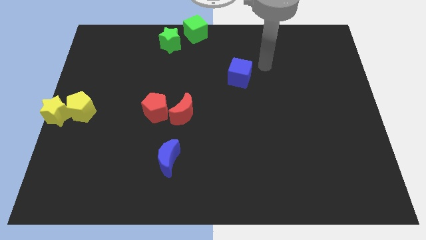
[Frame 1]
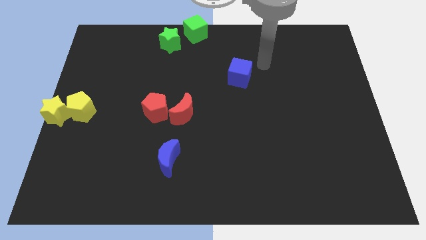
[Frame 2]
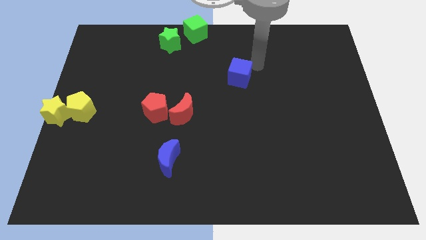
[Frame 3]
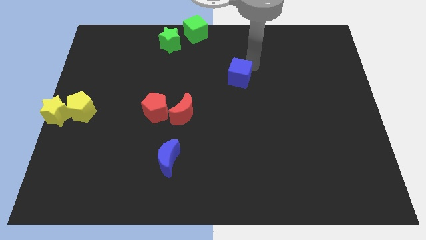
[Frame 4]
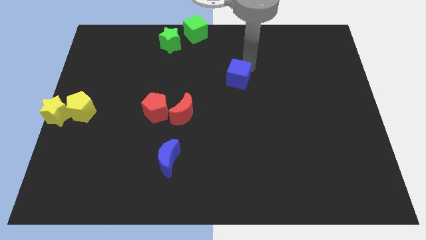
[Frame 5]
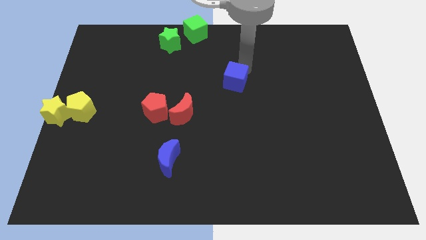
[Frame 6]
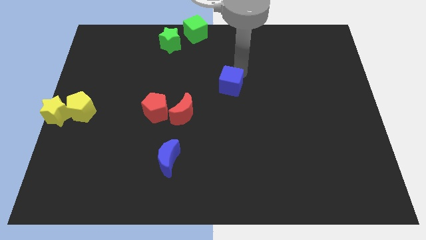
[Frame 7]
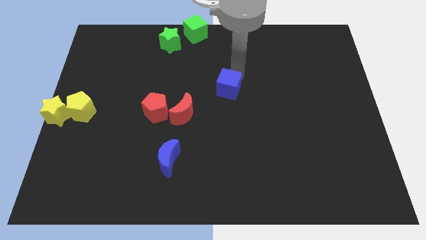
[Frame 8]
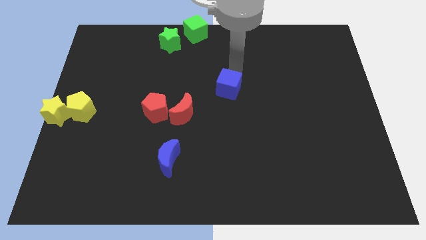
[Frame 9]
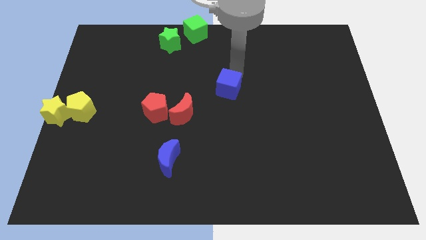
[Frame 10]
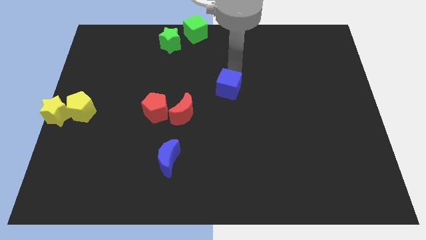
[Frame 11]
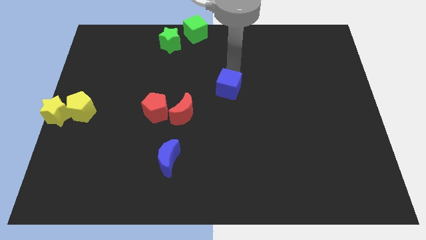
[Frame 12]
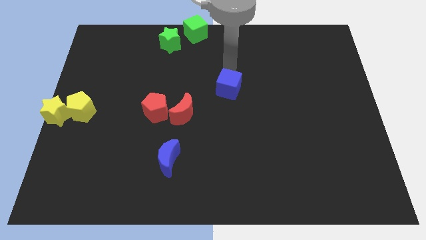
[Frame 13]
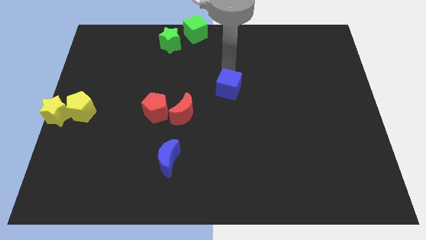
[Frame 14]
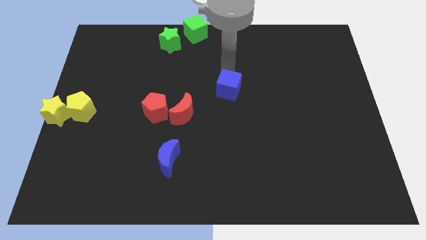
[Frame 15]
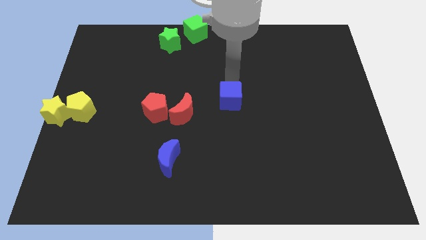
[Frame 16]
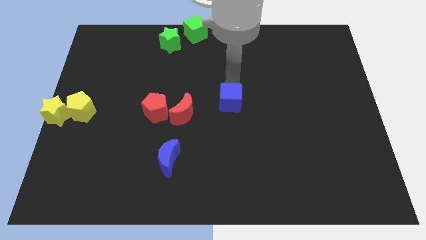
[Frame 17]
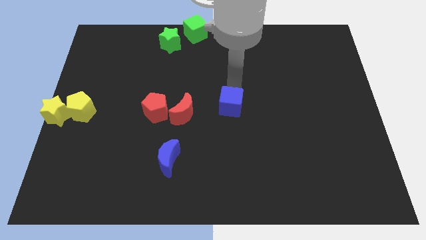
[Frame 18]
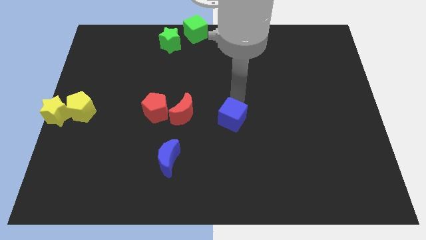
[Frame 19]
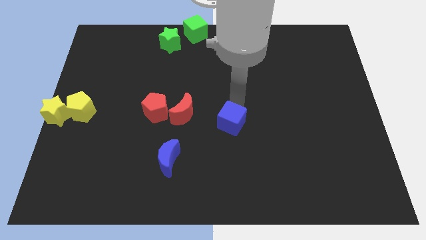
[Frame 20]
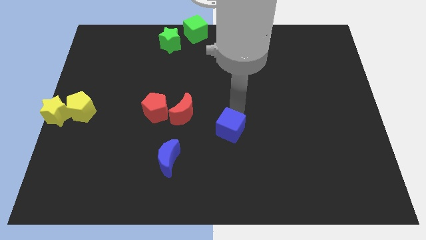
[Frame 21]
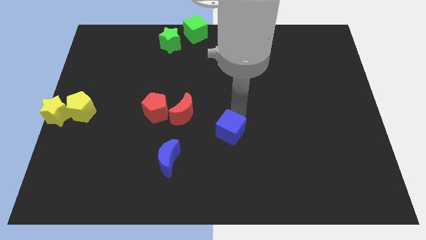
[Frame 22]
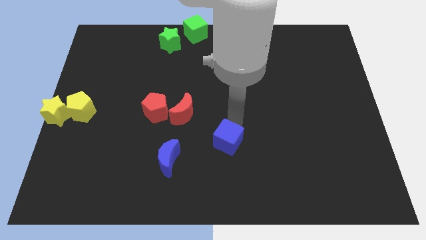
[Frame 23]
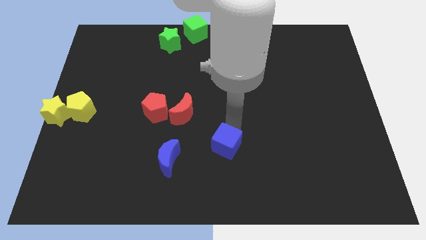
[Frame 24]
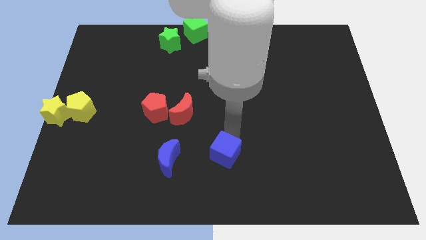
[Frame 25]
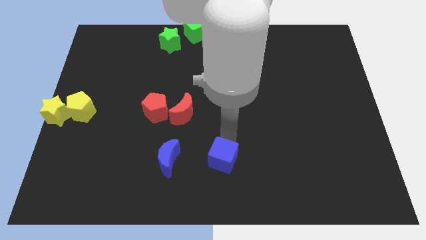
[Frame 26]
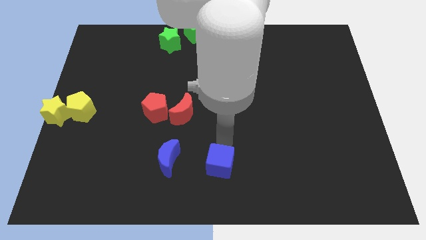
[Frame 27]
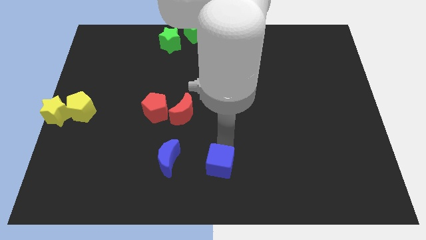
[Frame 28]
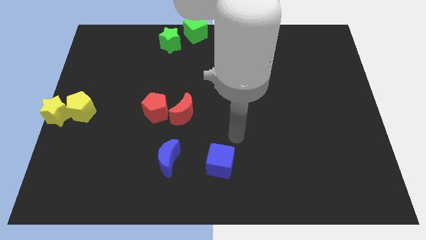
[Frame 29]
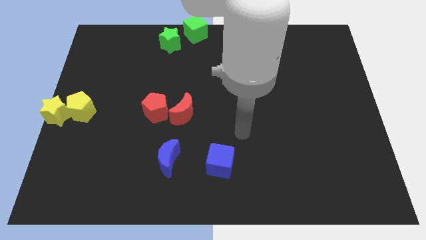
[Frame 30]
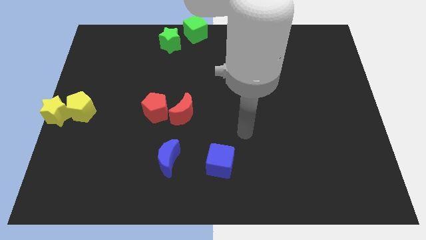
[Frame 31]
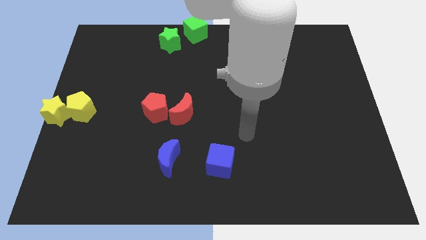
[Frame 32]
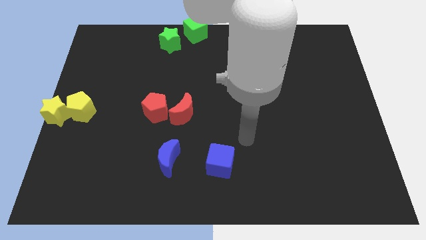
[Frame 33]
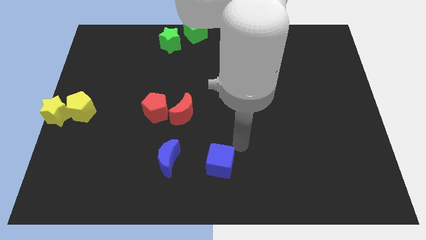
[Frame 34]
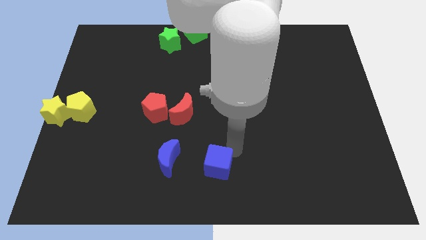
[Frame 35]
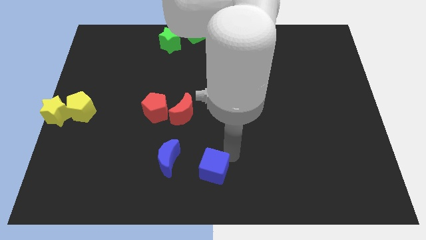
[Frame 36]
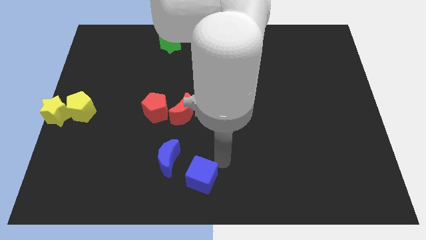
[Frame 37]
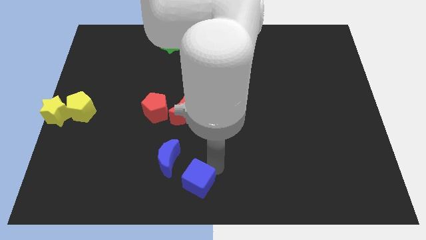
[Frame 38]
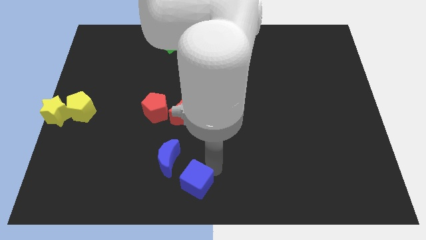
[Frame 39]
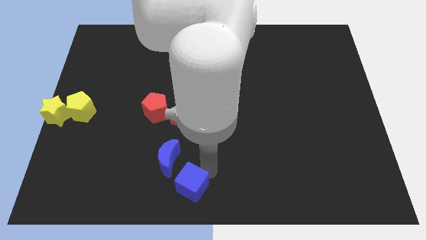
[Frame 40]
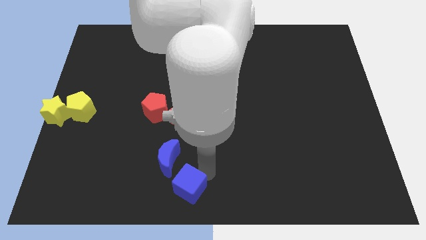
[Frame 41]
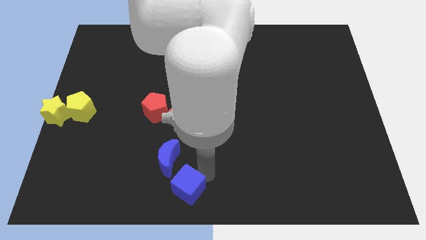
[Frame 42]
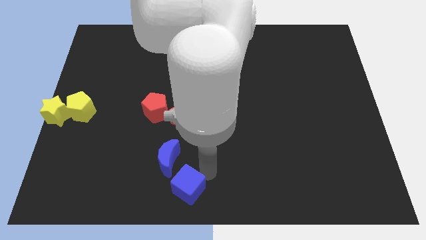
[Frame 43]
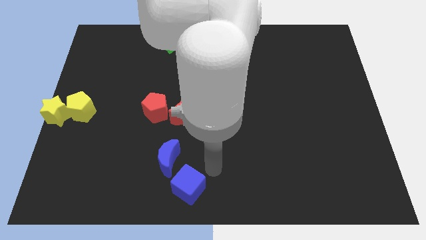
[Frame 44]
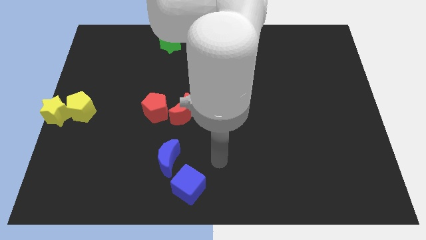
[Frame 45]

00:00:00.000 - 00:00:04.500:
push the blue cube towards the bottom center of the board

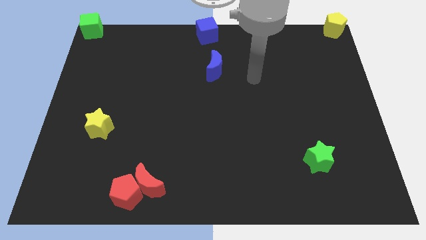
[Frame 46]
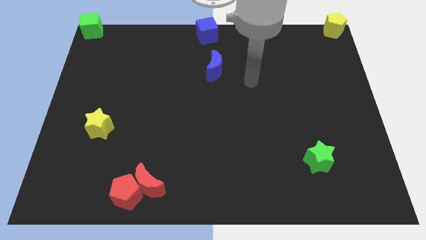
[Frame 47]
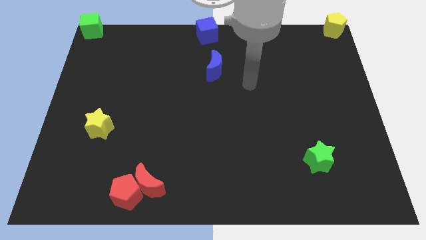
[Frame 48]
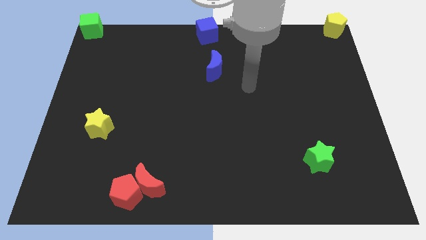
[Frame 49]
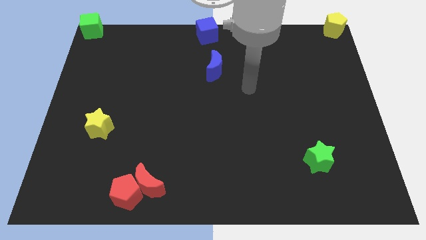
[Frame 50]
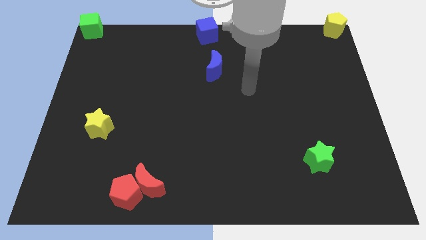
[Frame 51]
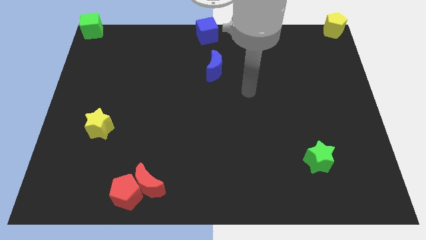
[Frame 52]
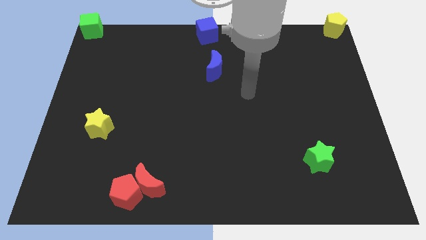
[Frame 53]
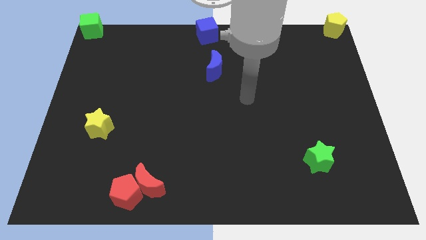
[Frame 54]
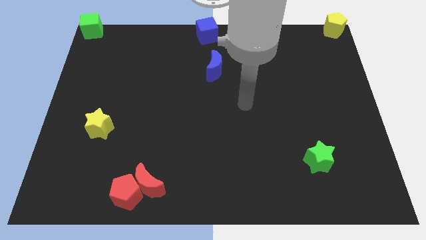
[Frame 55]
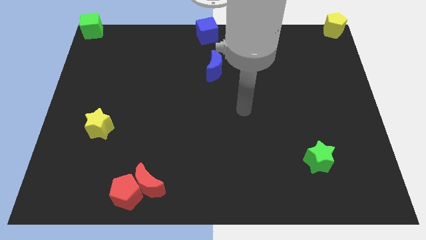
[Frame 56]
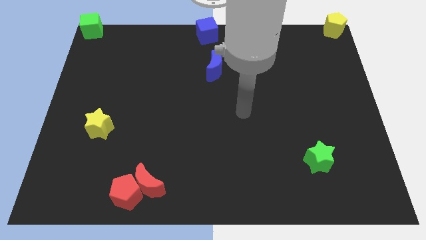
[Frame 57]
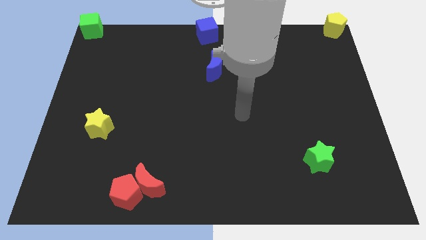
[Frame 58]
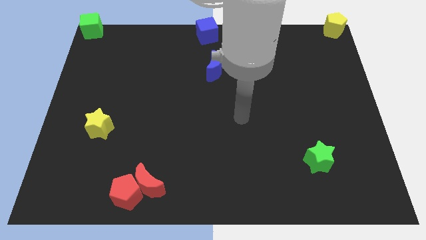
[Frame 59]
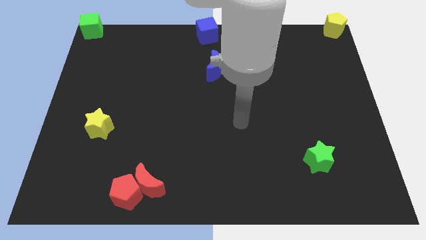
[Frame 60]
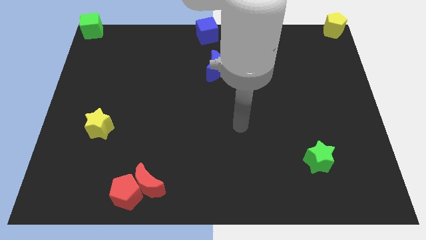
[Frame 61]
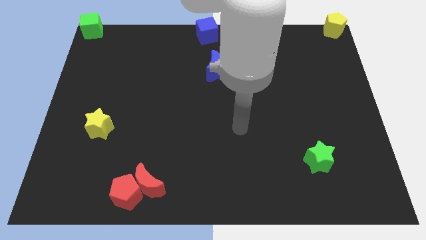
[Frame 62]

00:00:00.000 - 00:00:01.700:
move your arm downwards

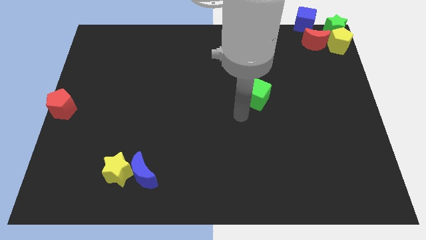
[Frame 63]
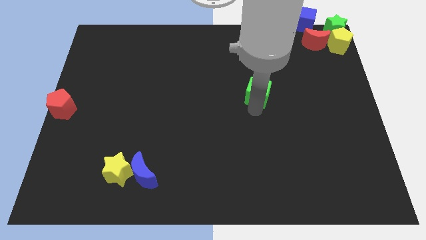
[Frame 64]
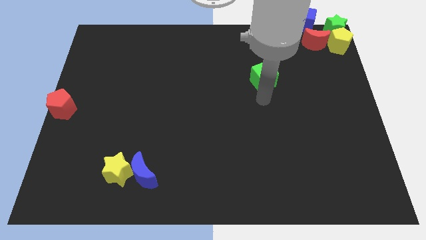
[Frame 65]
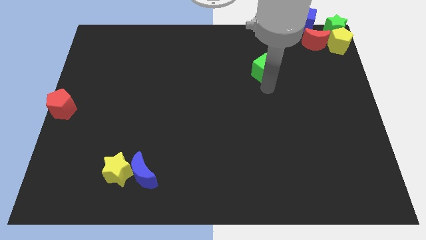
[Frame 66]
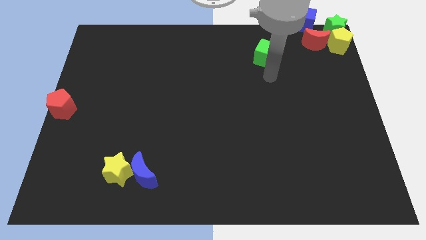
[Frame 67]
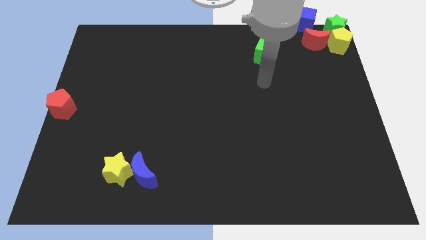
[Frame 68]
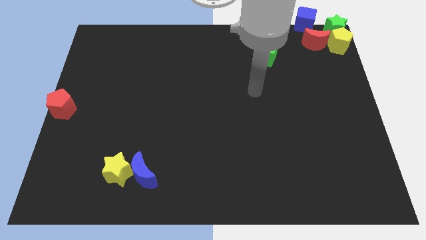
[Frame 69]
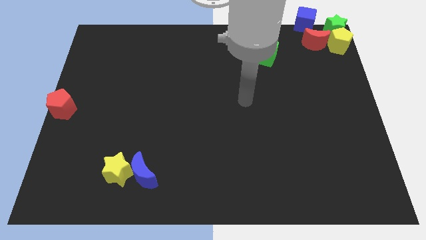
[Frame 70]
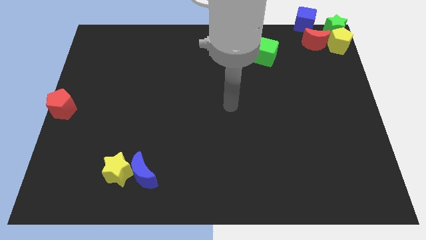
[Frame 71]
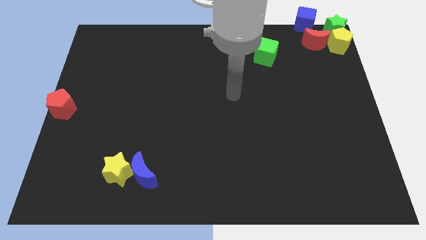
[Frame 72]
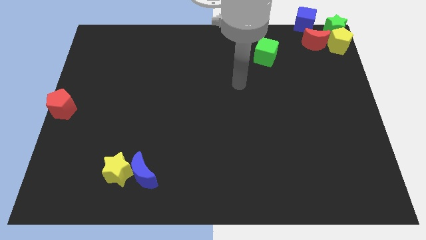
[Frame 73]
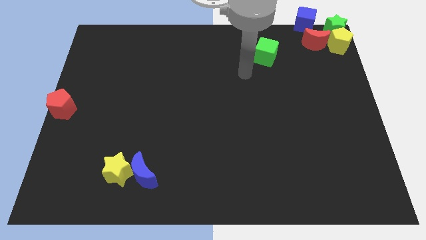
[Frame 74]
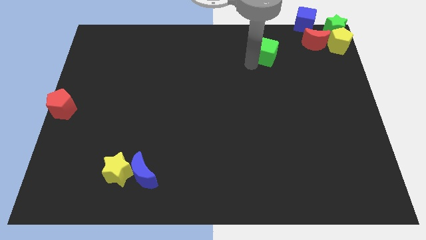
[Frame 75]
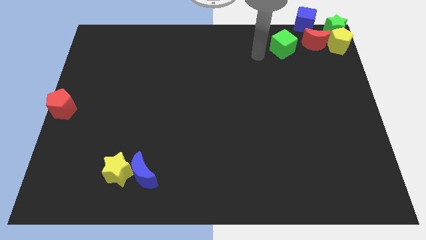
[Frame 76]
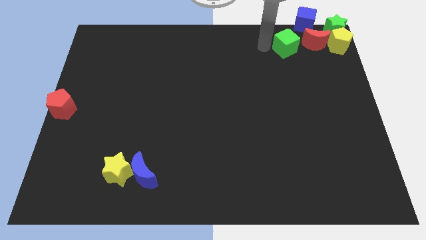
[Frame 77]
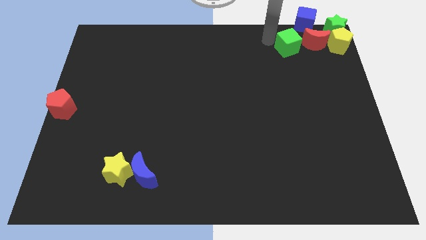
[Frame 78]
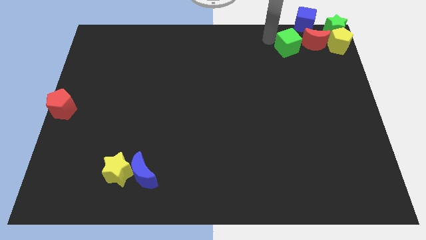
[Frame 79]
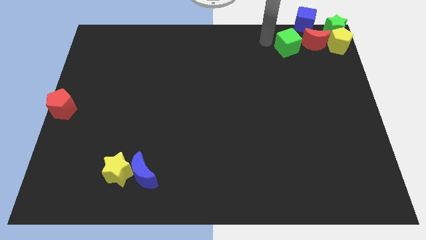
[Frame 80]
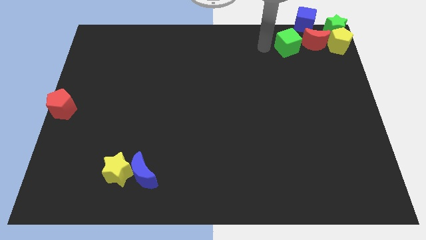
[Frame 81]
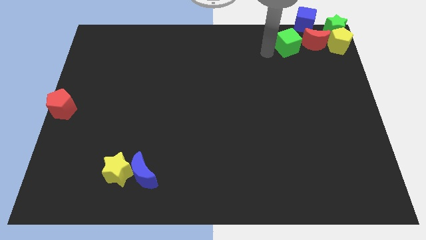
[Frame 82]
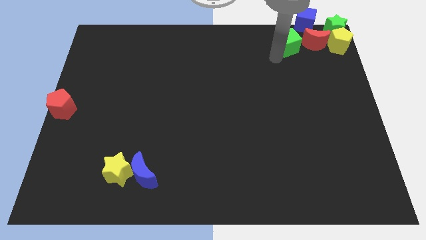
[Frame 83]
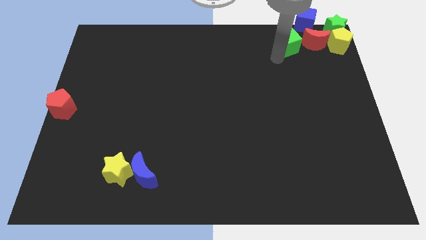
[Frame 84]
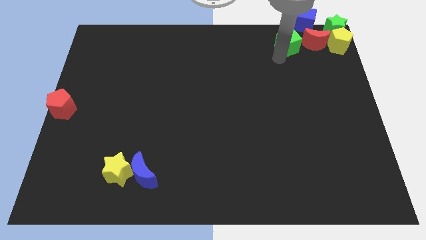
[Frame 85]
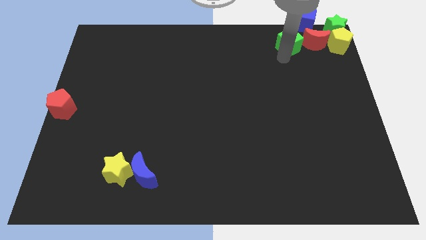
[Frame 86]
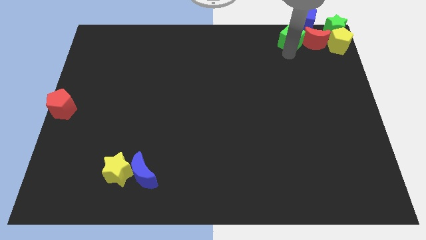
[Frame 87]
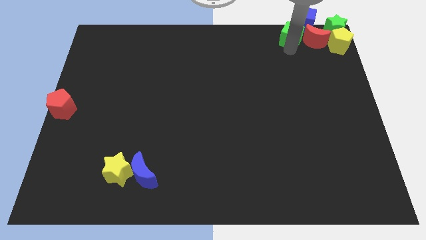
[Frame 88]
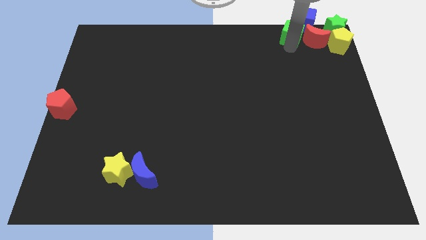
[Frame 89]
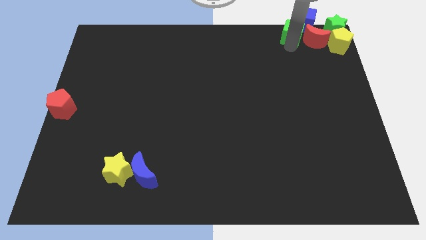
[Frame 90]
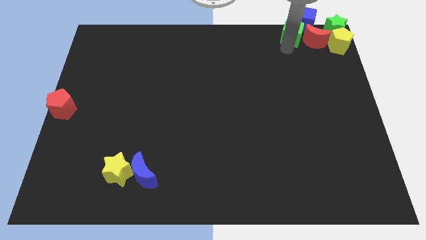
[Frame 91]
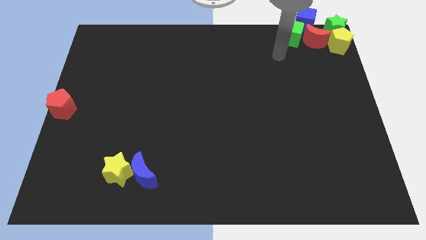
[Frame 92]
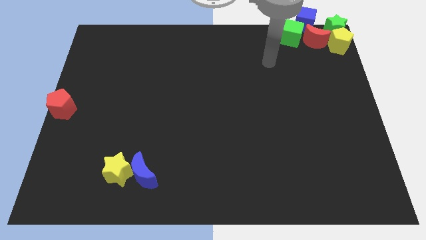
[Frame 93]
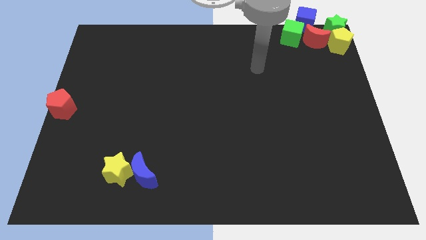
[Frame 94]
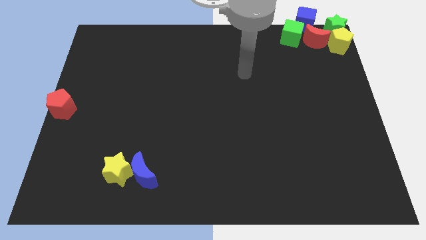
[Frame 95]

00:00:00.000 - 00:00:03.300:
add the green cube to the group of blocks at the top right corner of the board
